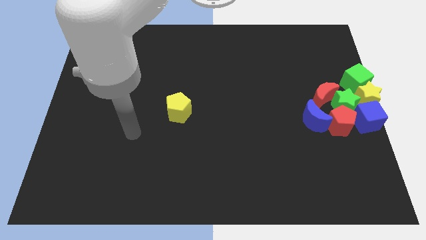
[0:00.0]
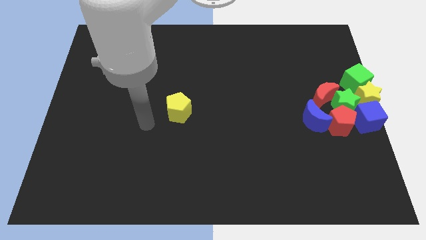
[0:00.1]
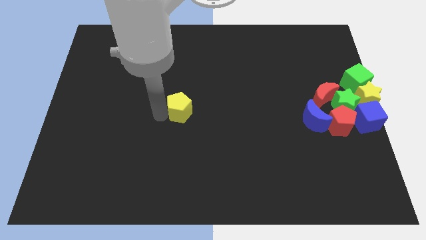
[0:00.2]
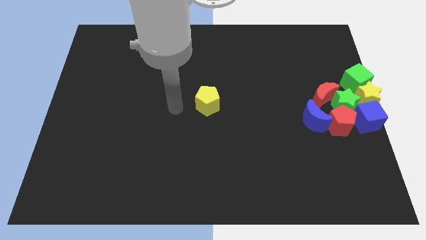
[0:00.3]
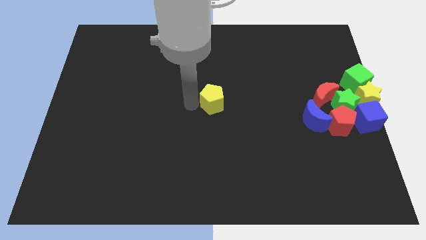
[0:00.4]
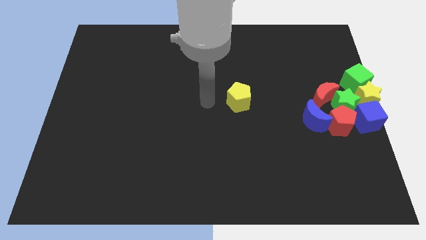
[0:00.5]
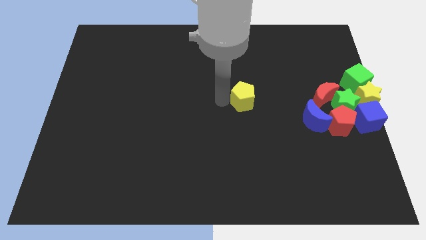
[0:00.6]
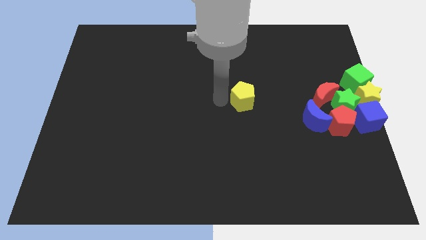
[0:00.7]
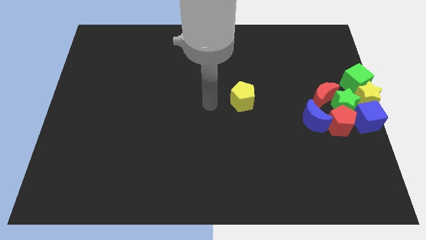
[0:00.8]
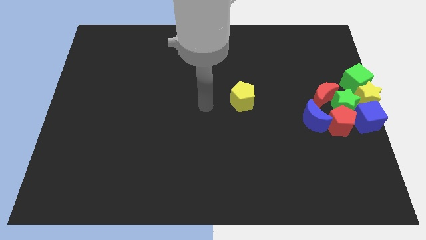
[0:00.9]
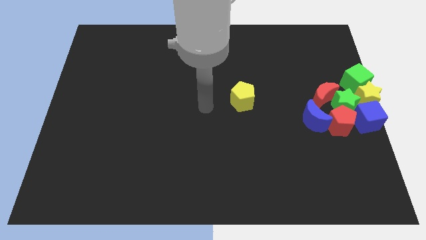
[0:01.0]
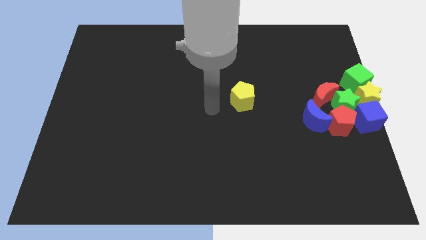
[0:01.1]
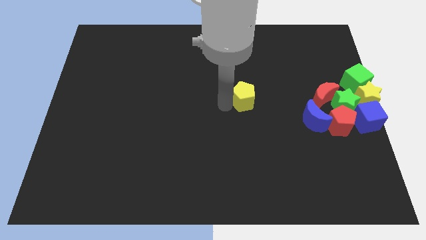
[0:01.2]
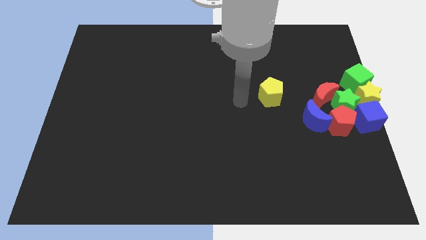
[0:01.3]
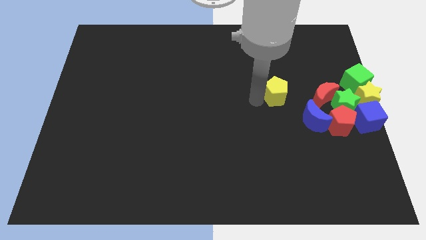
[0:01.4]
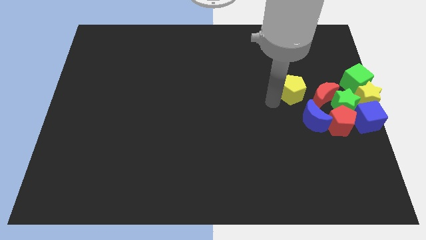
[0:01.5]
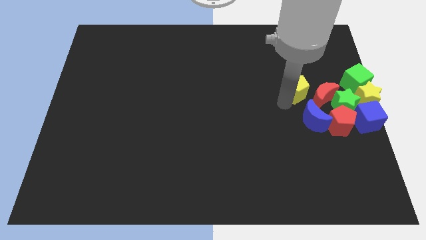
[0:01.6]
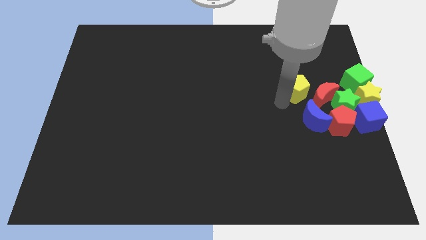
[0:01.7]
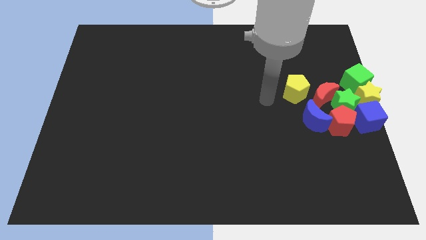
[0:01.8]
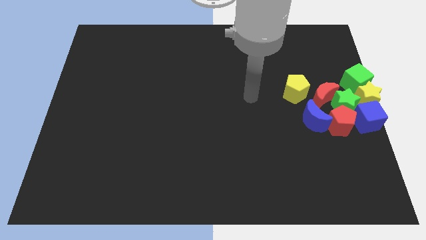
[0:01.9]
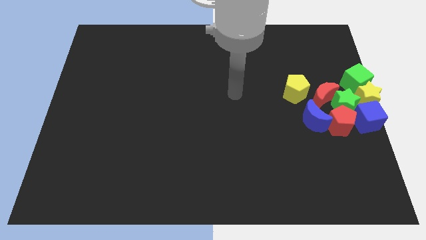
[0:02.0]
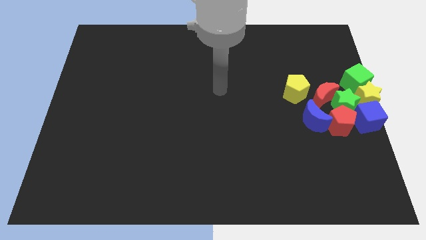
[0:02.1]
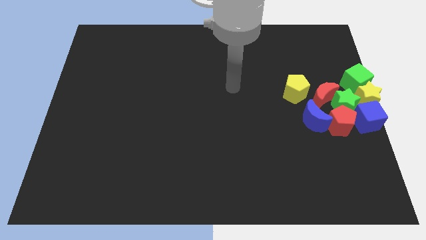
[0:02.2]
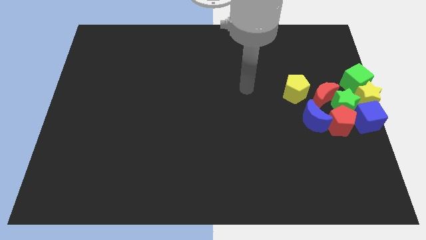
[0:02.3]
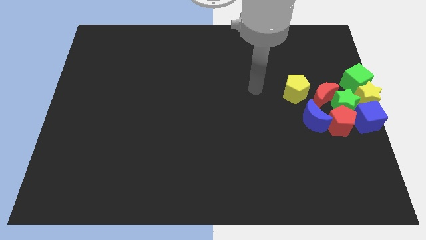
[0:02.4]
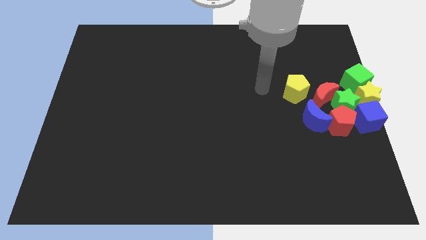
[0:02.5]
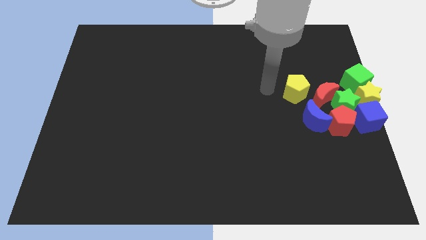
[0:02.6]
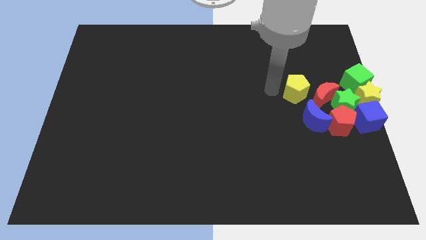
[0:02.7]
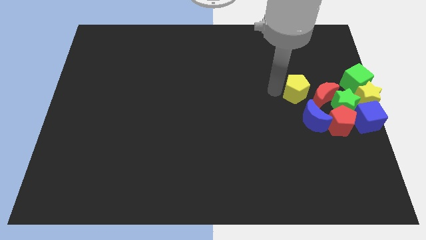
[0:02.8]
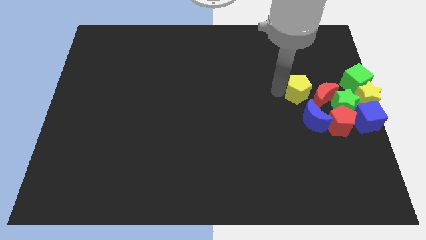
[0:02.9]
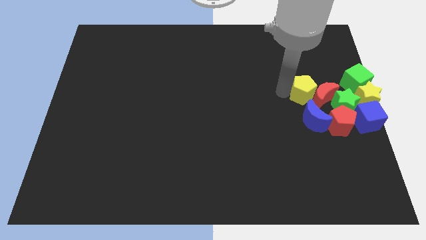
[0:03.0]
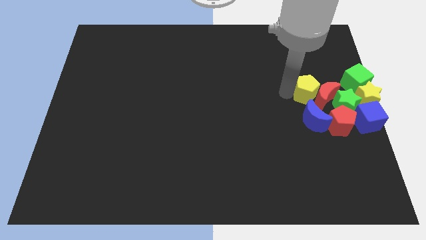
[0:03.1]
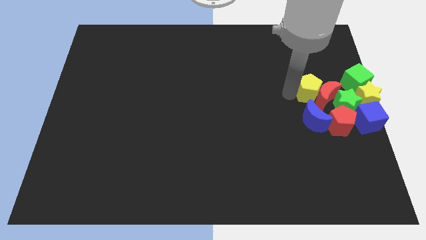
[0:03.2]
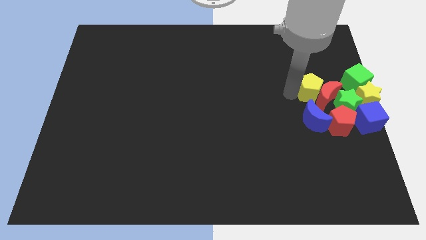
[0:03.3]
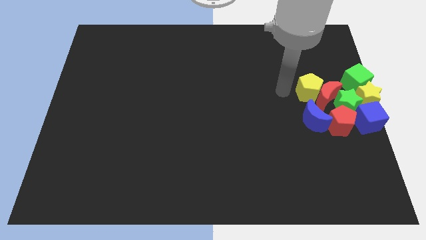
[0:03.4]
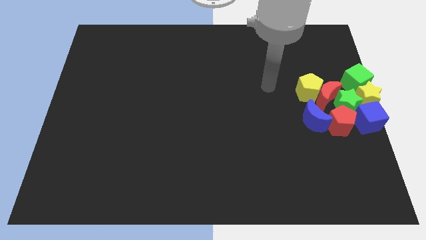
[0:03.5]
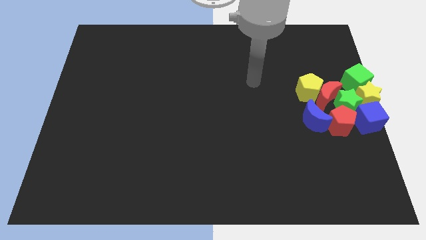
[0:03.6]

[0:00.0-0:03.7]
move yellow pentagon in group of blocks

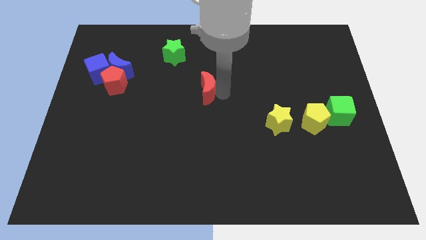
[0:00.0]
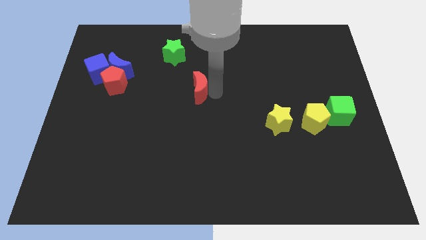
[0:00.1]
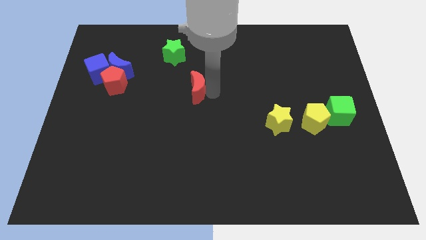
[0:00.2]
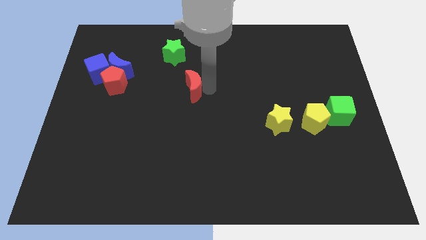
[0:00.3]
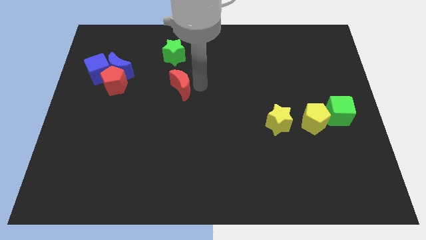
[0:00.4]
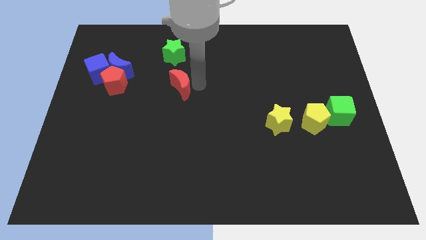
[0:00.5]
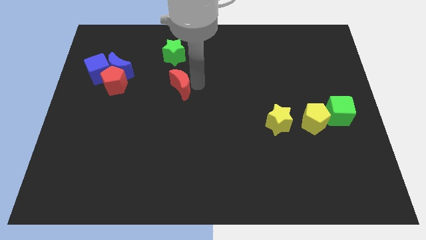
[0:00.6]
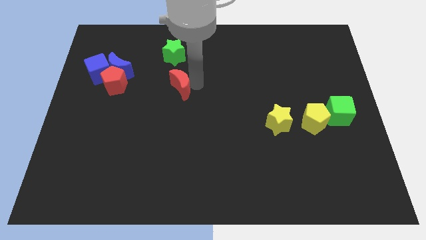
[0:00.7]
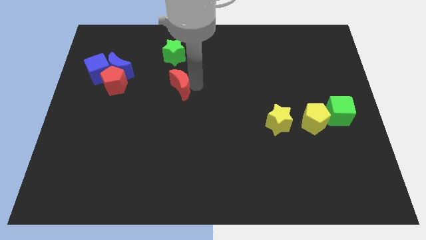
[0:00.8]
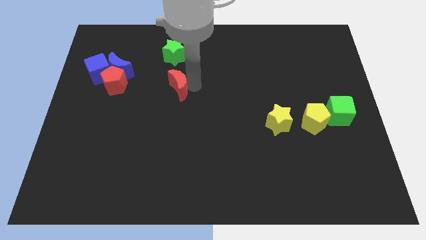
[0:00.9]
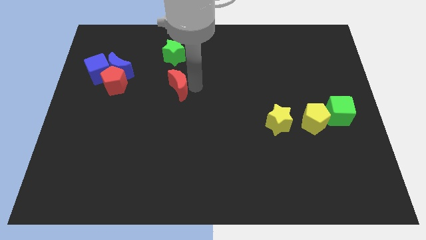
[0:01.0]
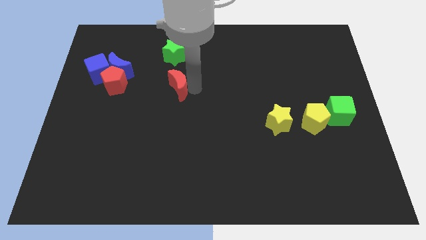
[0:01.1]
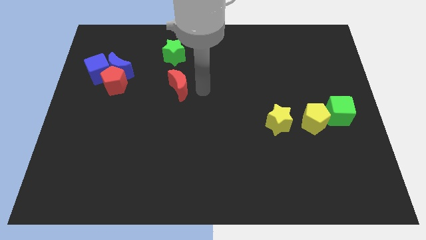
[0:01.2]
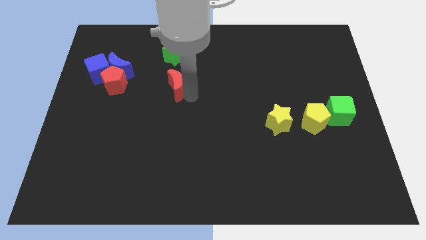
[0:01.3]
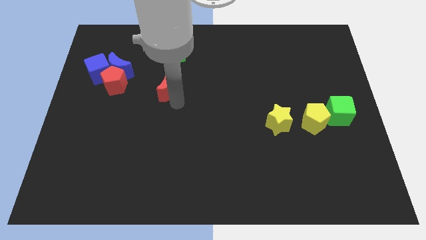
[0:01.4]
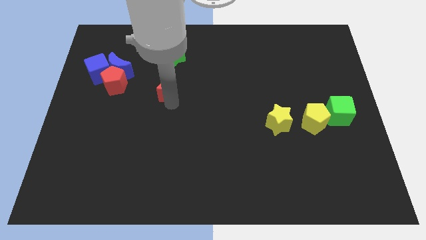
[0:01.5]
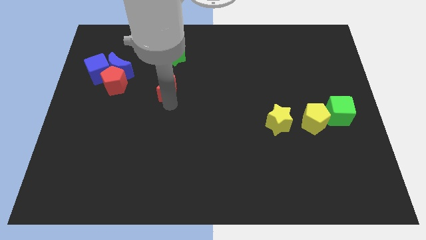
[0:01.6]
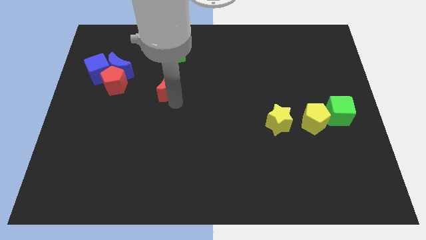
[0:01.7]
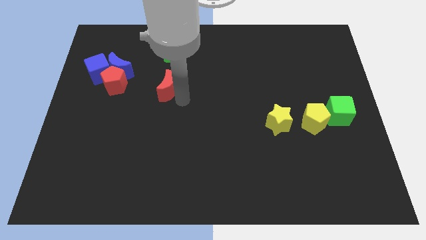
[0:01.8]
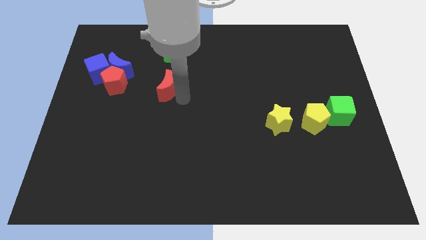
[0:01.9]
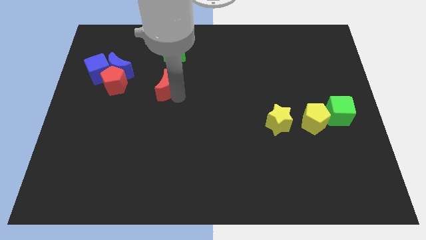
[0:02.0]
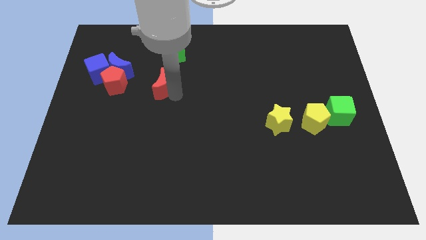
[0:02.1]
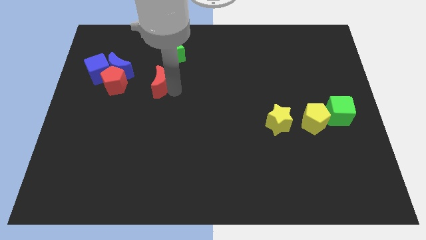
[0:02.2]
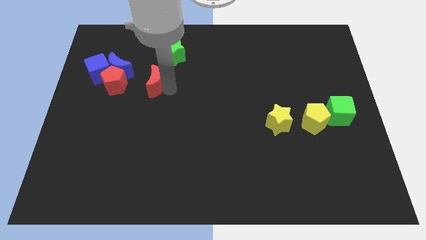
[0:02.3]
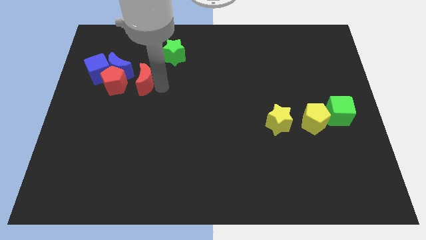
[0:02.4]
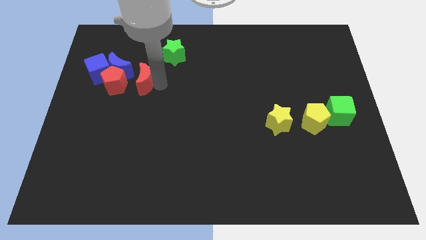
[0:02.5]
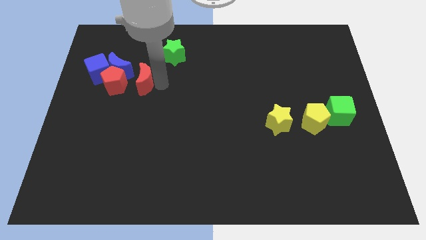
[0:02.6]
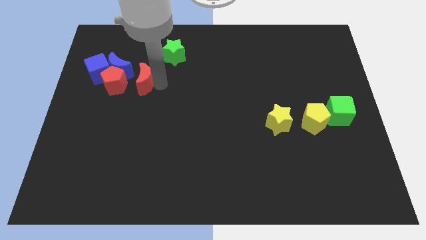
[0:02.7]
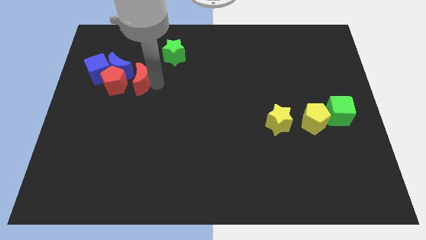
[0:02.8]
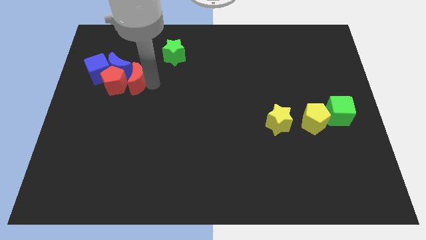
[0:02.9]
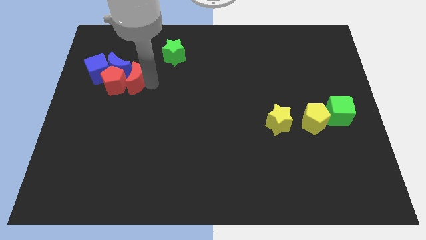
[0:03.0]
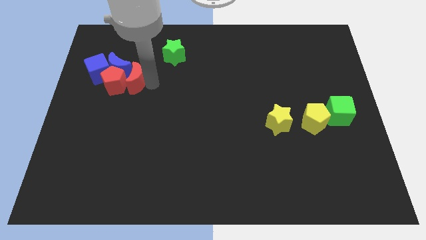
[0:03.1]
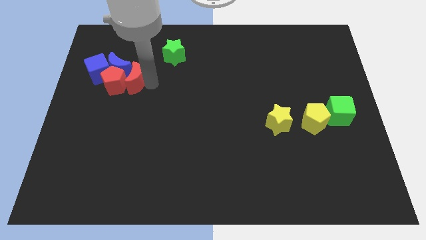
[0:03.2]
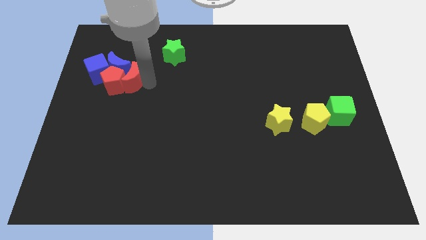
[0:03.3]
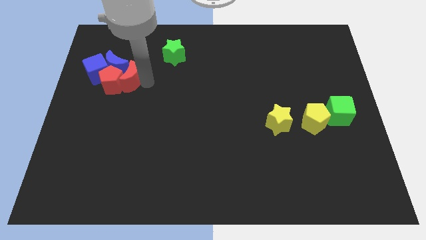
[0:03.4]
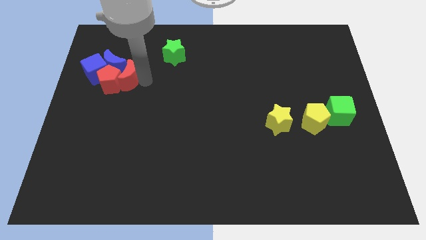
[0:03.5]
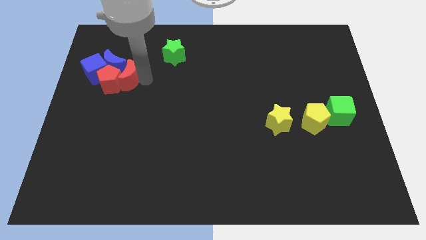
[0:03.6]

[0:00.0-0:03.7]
push the red crescent into the red pentagon

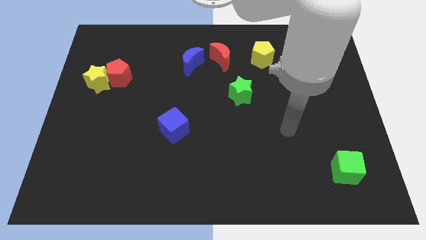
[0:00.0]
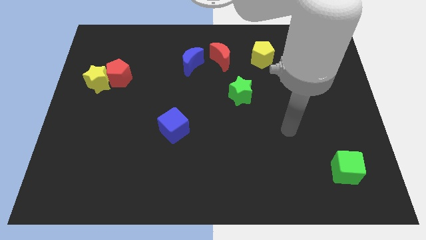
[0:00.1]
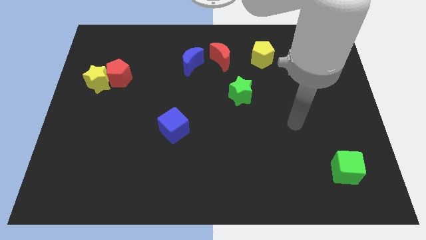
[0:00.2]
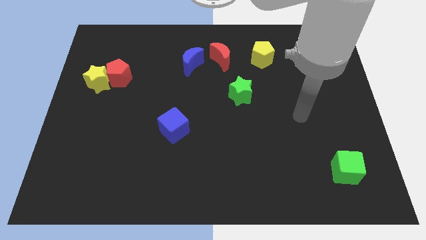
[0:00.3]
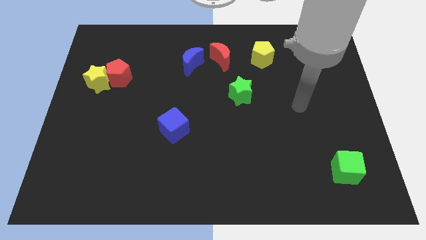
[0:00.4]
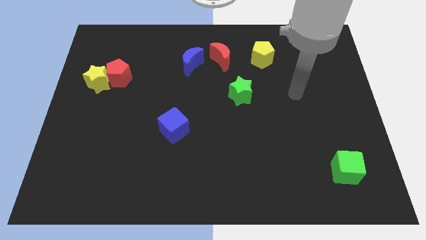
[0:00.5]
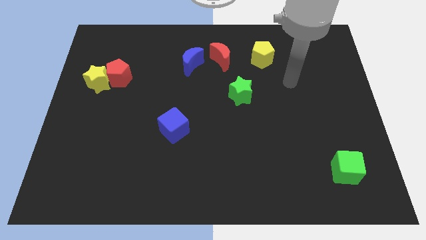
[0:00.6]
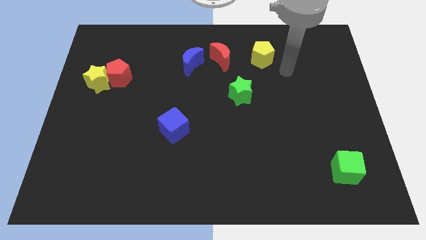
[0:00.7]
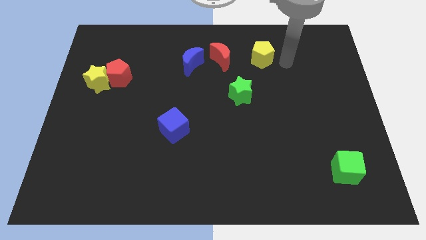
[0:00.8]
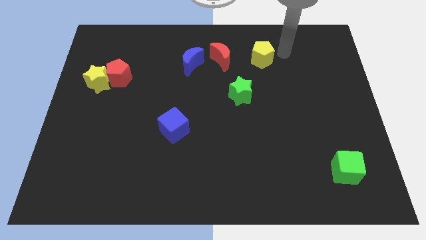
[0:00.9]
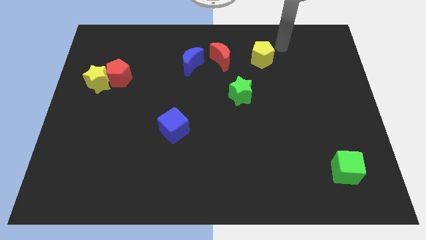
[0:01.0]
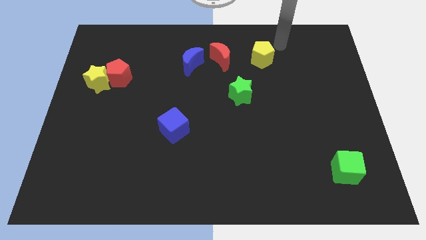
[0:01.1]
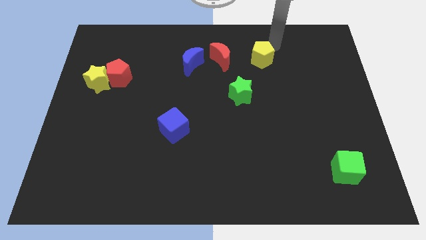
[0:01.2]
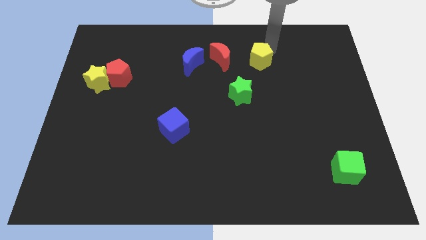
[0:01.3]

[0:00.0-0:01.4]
move your arm to the top right side of the yellow pentagon
